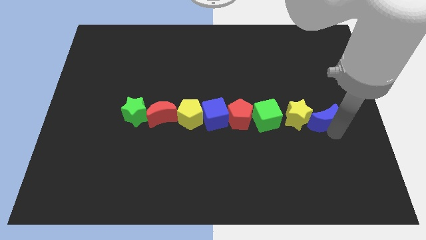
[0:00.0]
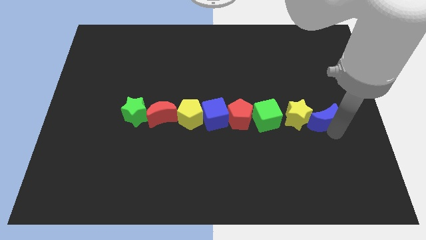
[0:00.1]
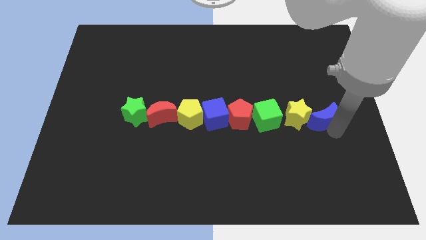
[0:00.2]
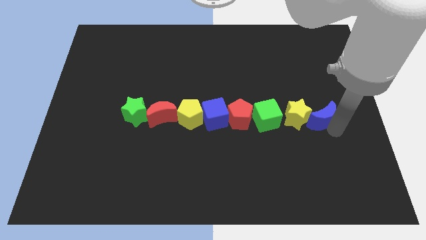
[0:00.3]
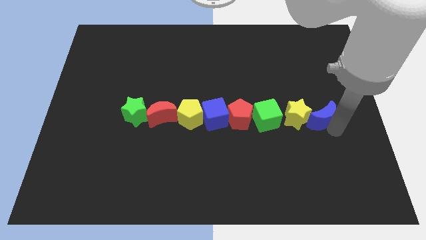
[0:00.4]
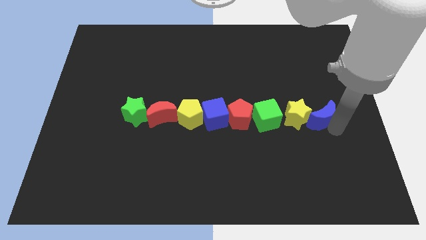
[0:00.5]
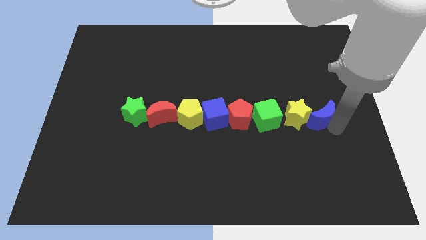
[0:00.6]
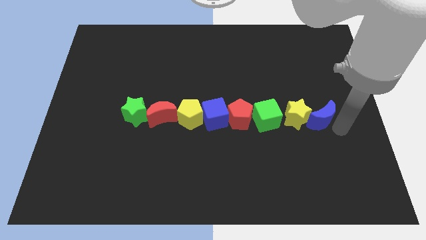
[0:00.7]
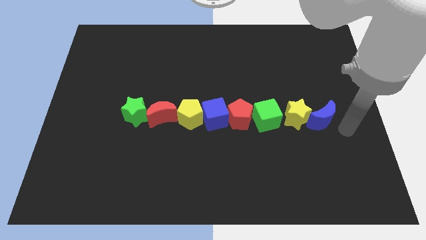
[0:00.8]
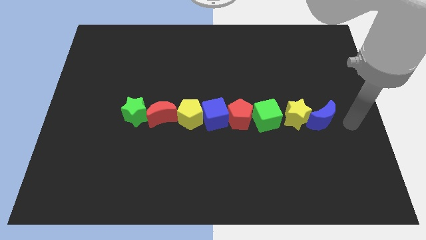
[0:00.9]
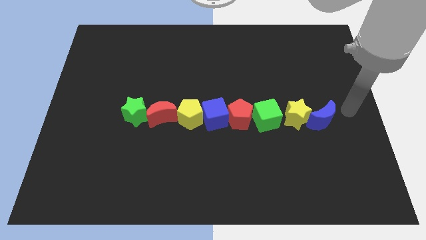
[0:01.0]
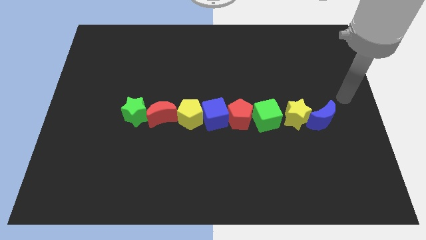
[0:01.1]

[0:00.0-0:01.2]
adjust the blue crescent to form a horizontal line with all blocks

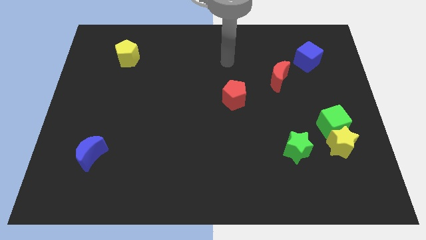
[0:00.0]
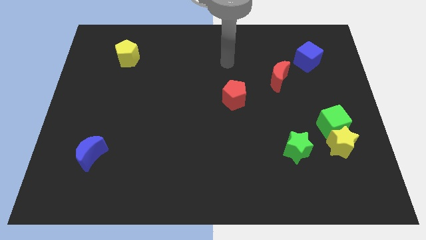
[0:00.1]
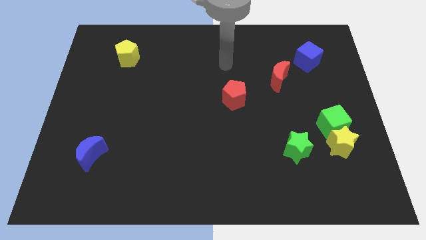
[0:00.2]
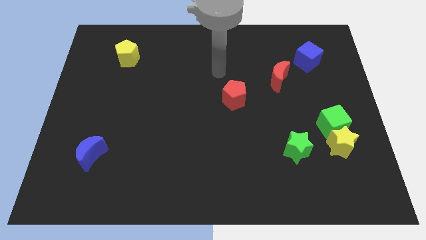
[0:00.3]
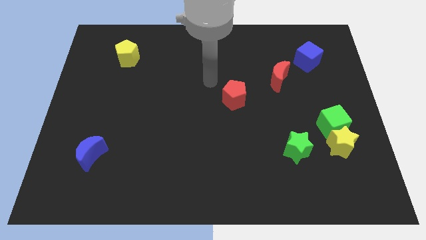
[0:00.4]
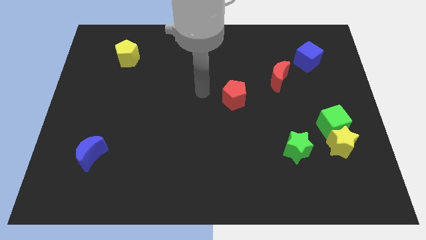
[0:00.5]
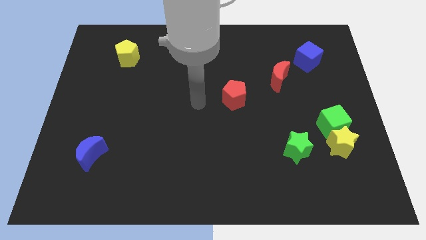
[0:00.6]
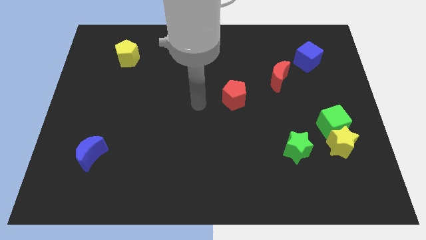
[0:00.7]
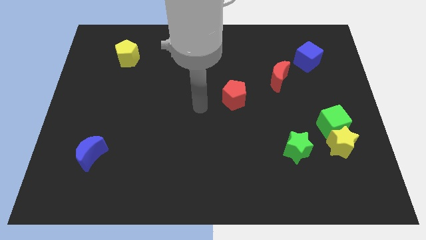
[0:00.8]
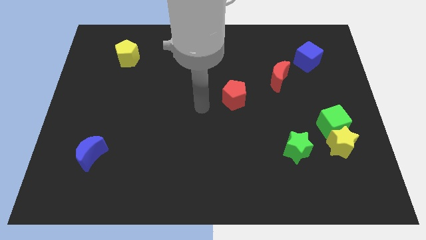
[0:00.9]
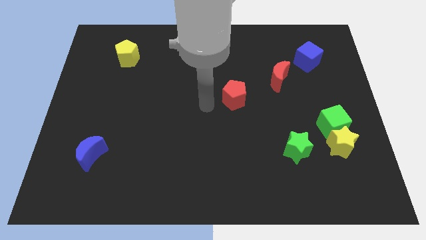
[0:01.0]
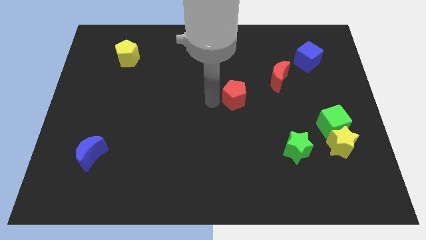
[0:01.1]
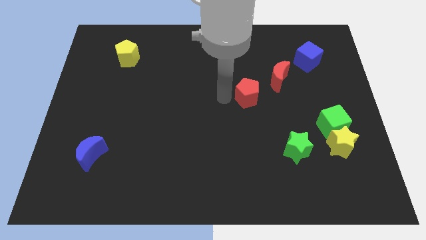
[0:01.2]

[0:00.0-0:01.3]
move your arm near to the red pentagon

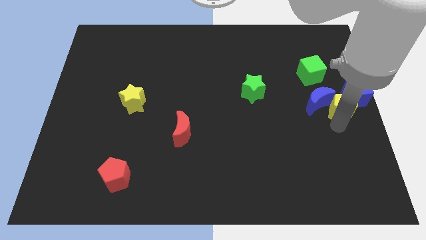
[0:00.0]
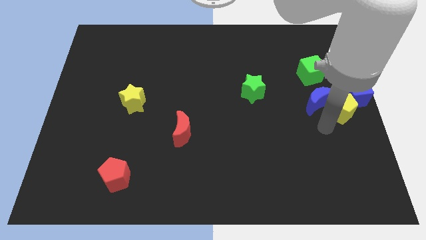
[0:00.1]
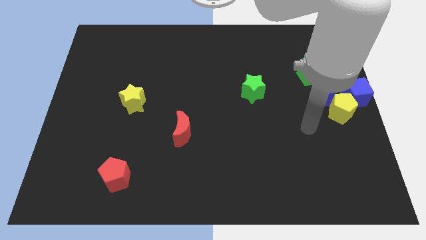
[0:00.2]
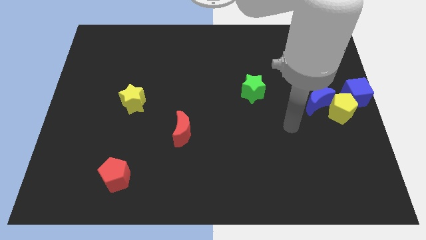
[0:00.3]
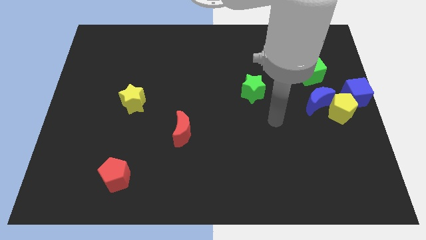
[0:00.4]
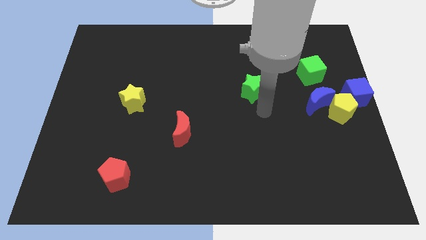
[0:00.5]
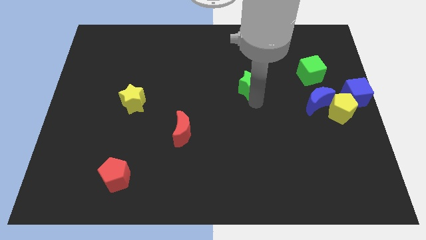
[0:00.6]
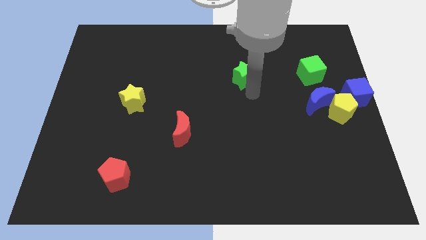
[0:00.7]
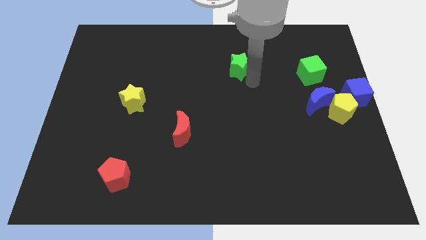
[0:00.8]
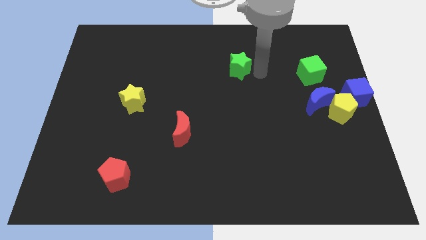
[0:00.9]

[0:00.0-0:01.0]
push the green star slightly to the top

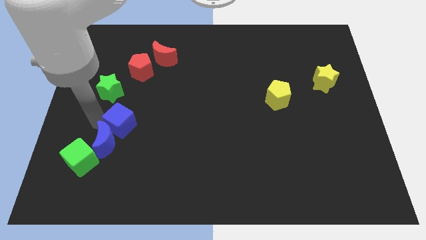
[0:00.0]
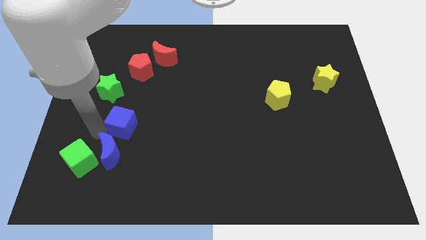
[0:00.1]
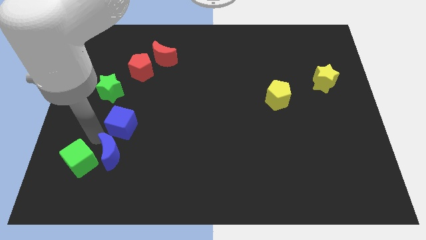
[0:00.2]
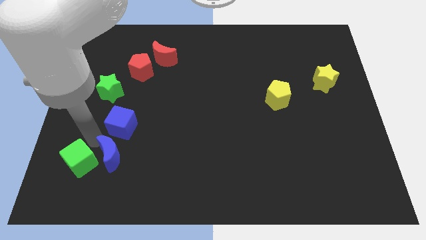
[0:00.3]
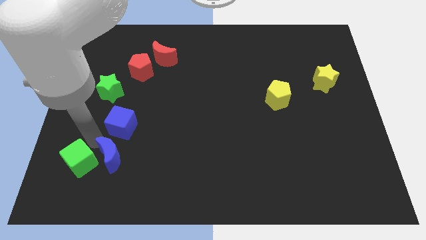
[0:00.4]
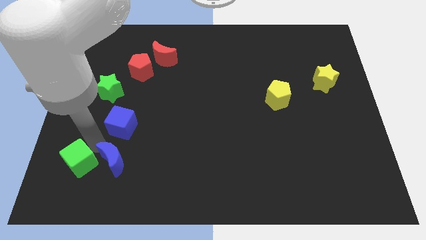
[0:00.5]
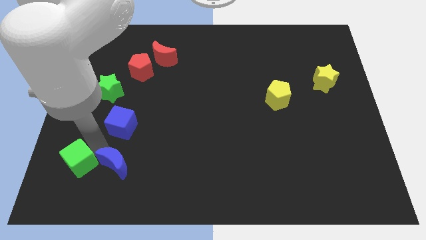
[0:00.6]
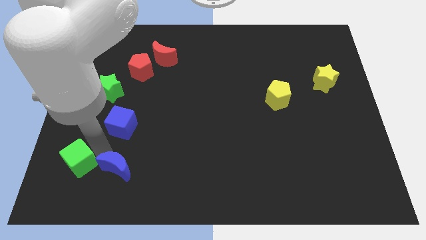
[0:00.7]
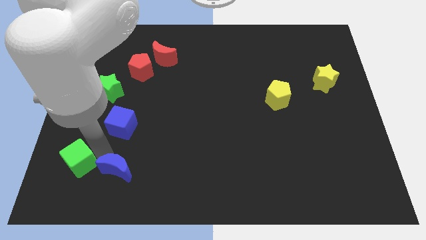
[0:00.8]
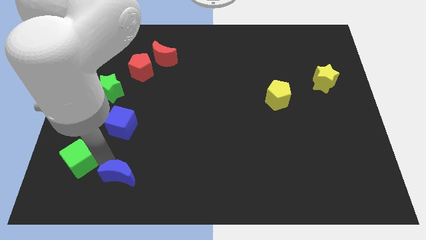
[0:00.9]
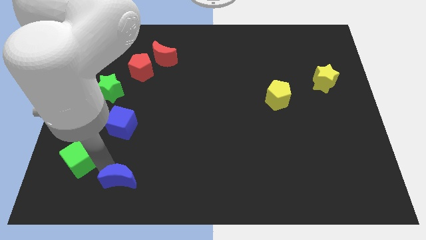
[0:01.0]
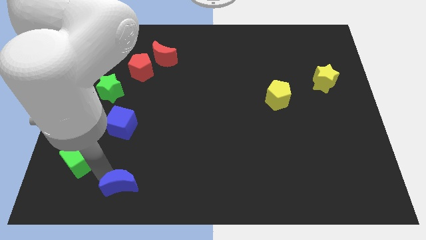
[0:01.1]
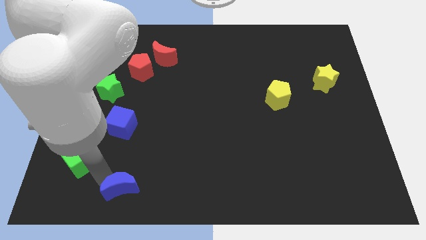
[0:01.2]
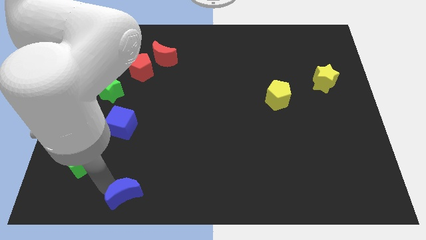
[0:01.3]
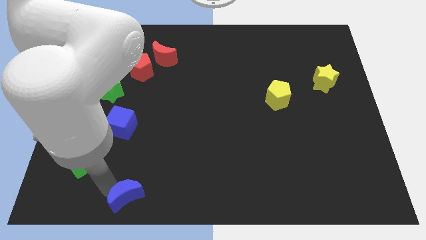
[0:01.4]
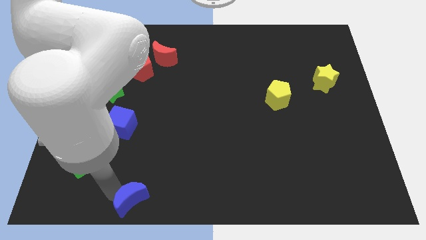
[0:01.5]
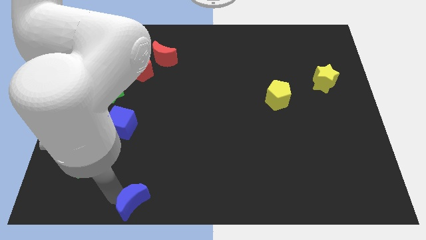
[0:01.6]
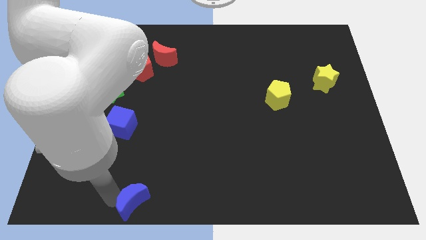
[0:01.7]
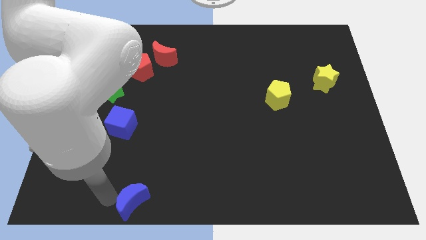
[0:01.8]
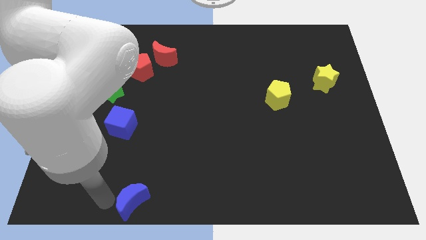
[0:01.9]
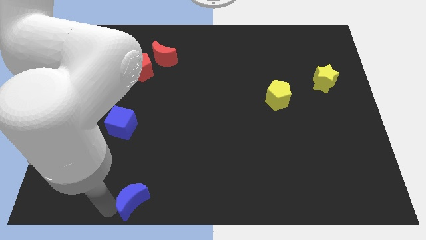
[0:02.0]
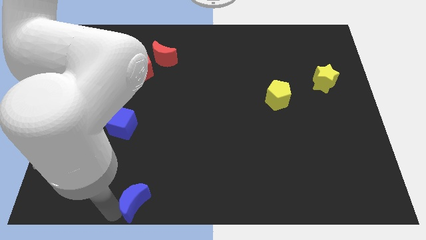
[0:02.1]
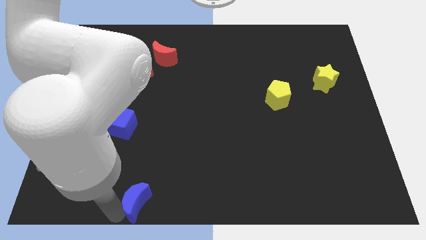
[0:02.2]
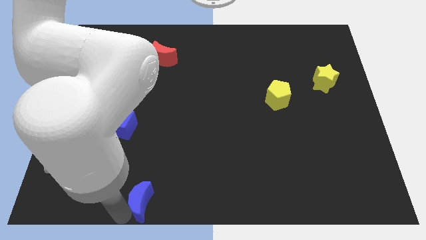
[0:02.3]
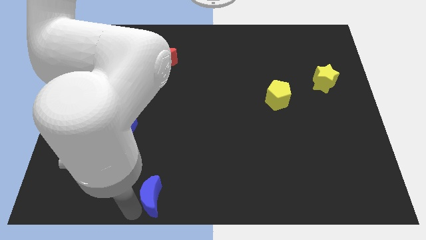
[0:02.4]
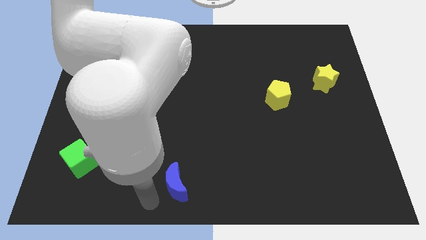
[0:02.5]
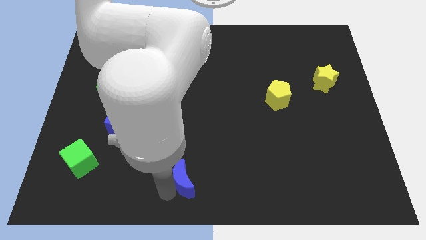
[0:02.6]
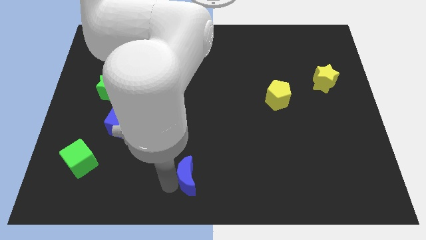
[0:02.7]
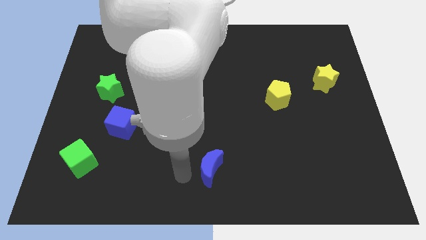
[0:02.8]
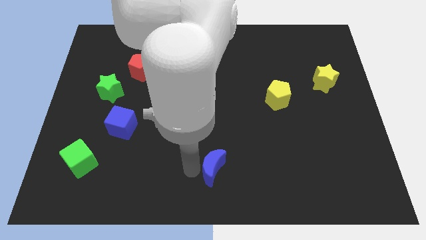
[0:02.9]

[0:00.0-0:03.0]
move blue moon to bottom center

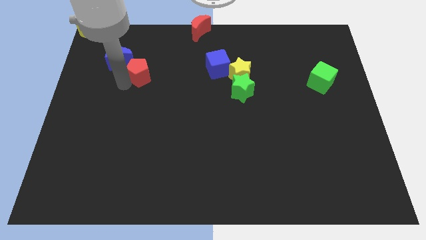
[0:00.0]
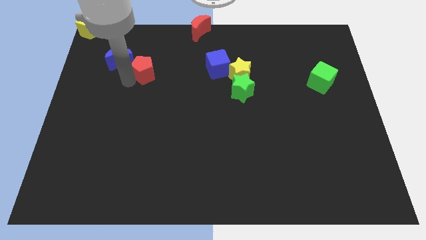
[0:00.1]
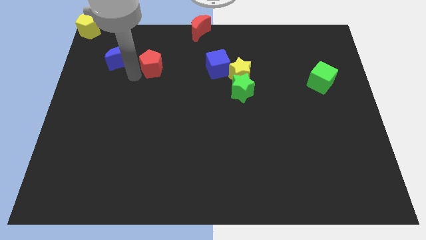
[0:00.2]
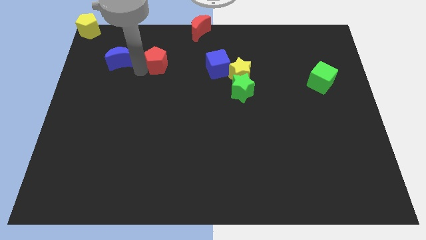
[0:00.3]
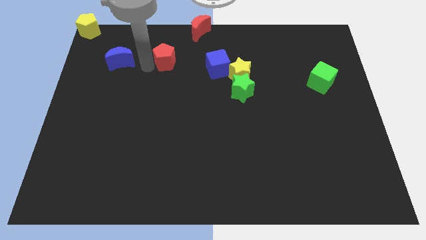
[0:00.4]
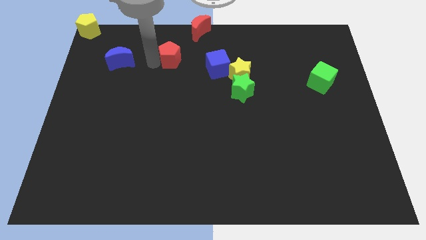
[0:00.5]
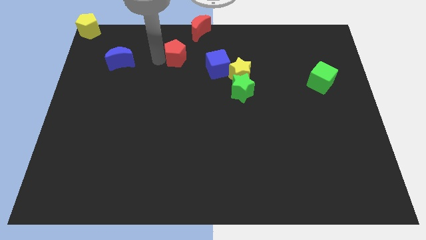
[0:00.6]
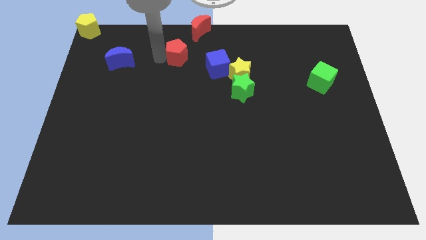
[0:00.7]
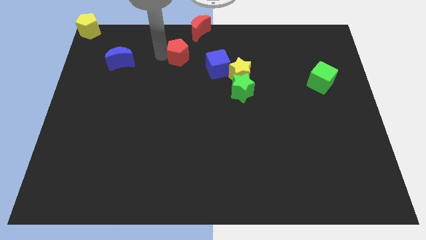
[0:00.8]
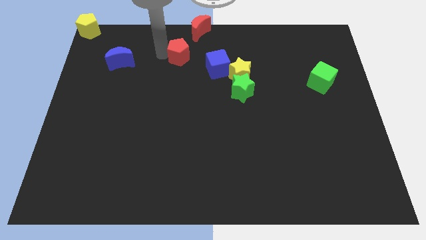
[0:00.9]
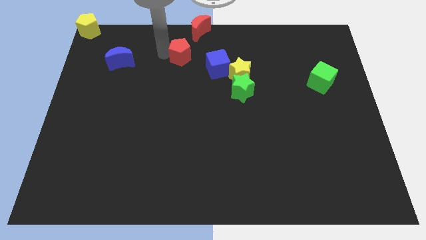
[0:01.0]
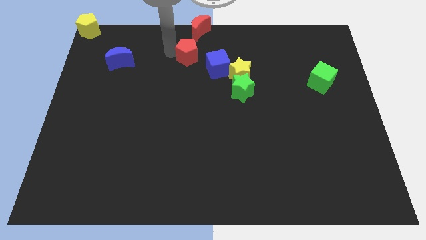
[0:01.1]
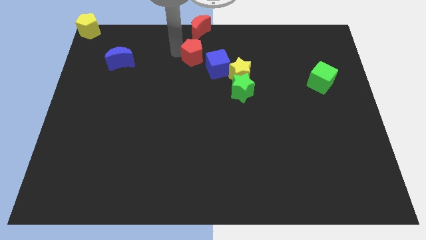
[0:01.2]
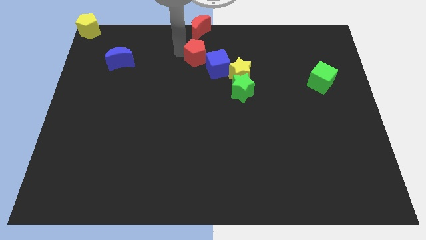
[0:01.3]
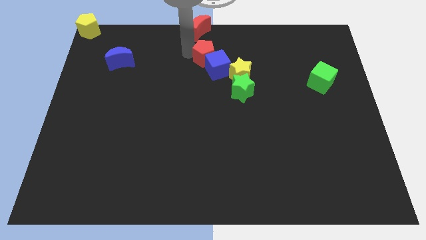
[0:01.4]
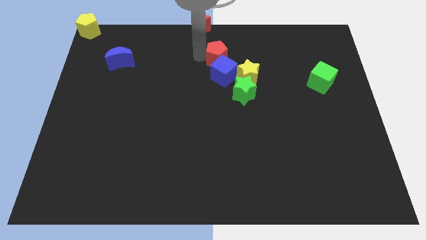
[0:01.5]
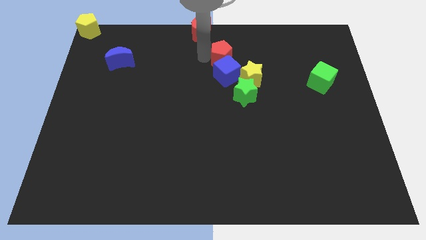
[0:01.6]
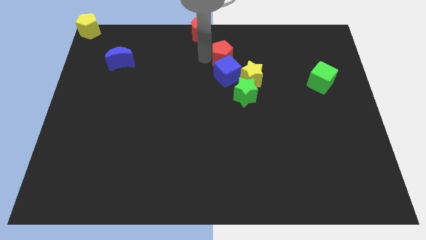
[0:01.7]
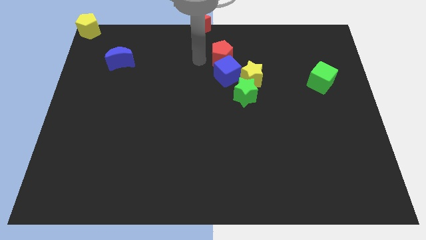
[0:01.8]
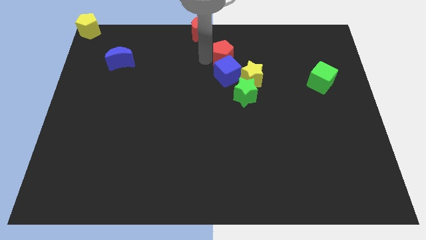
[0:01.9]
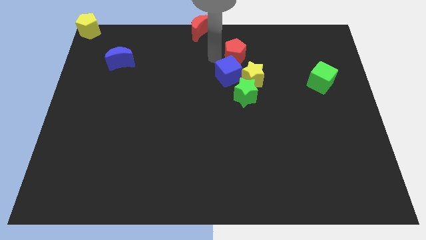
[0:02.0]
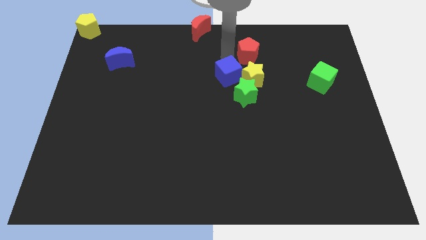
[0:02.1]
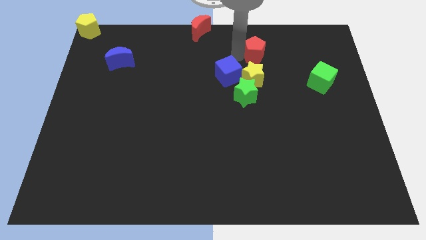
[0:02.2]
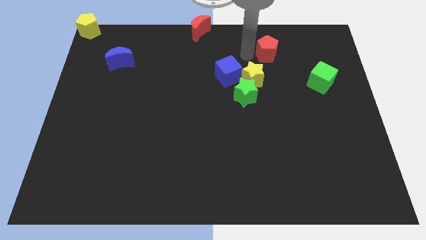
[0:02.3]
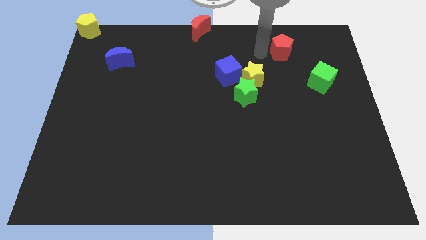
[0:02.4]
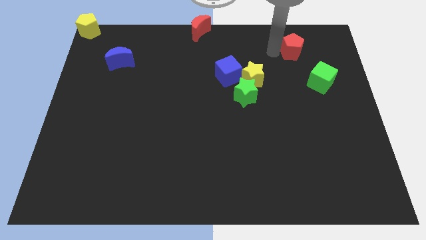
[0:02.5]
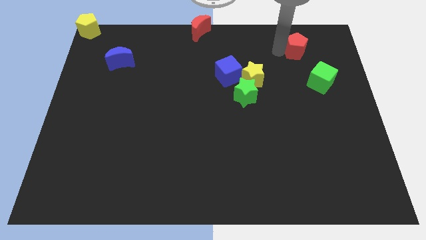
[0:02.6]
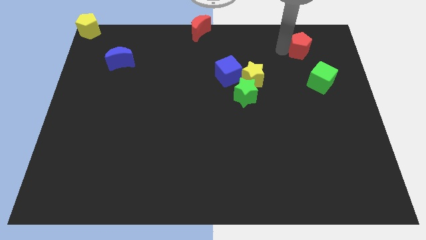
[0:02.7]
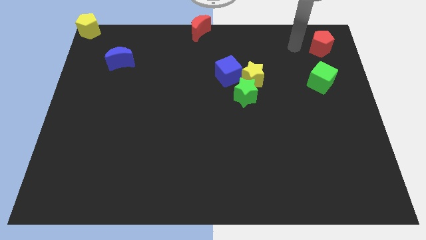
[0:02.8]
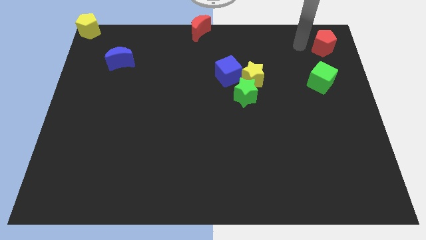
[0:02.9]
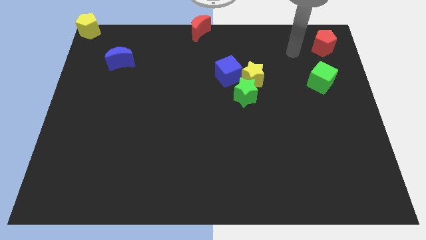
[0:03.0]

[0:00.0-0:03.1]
push red pentagon above green cube
